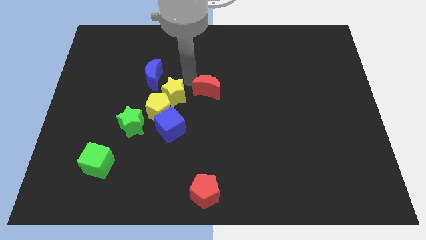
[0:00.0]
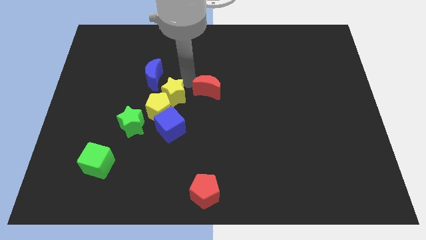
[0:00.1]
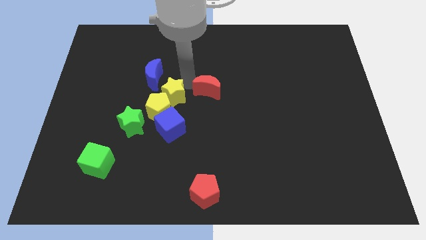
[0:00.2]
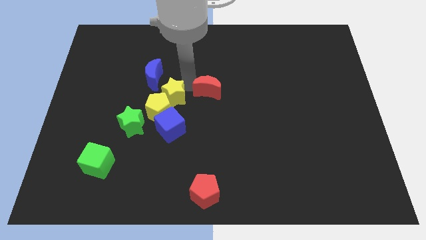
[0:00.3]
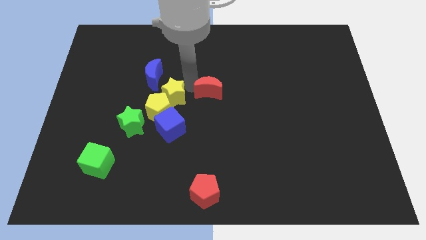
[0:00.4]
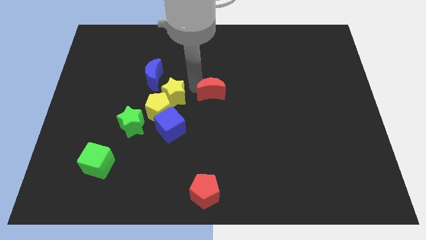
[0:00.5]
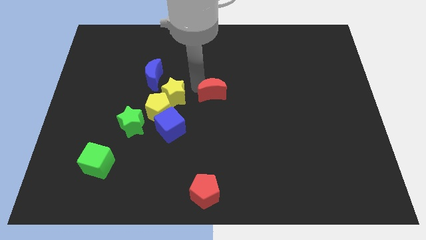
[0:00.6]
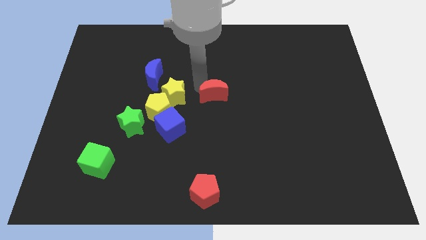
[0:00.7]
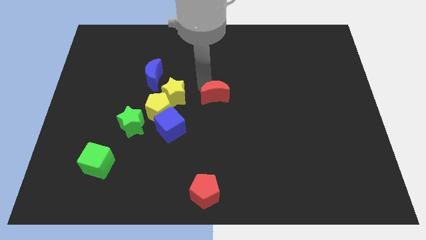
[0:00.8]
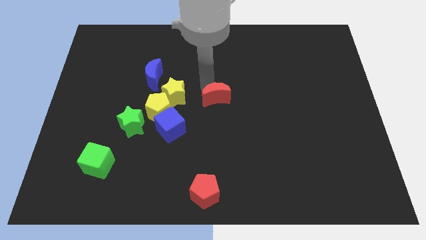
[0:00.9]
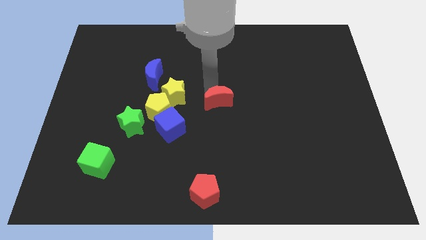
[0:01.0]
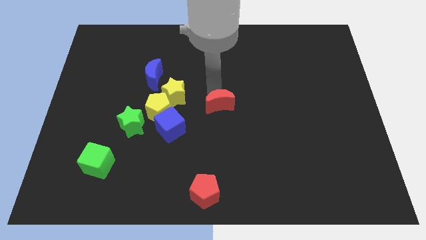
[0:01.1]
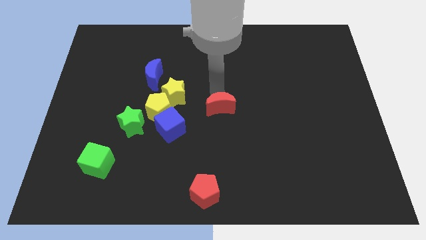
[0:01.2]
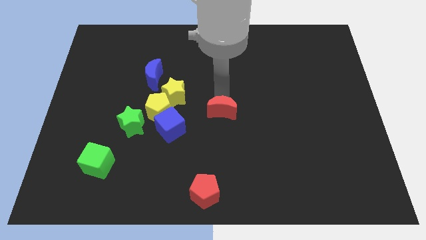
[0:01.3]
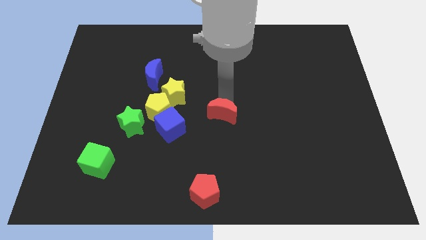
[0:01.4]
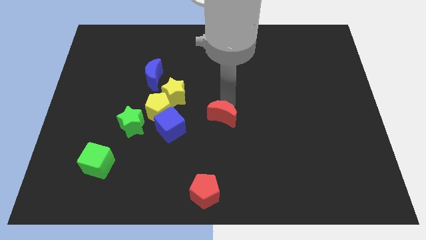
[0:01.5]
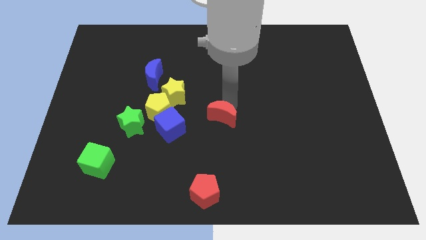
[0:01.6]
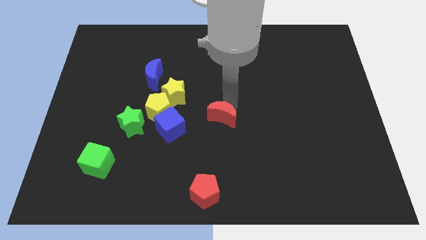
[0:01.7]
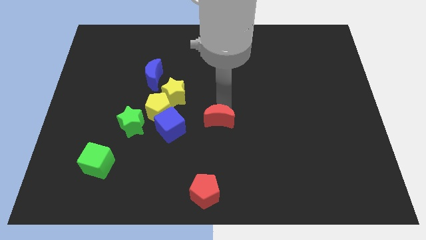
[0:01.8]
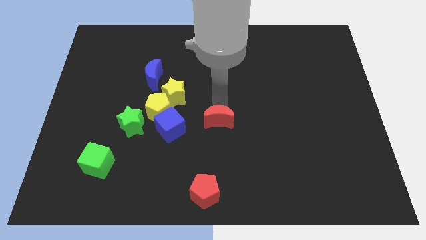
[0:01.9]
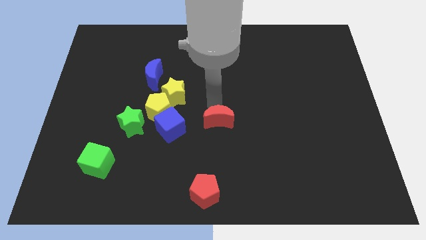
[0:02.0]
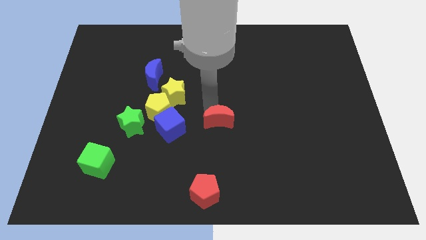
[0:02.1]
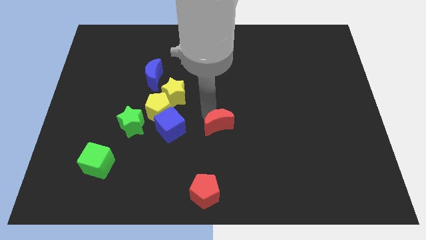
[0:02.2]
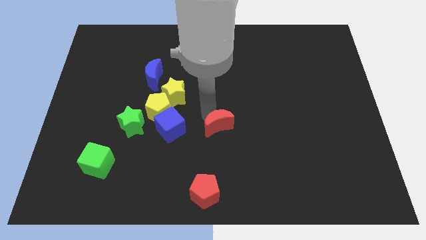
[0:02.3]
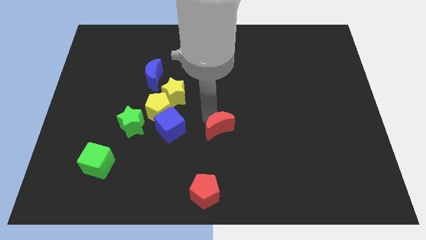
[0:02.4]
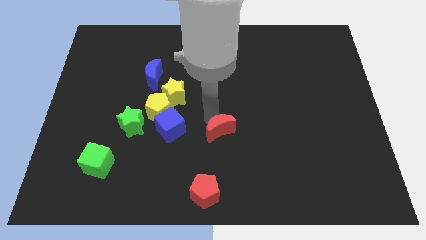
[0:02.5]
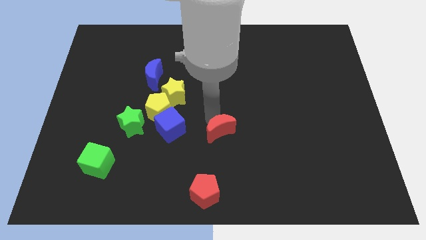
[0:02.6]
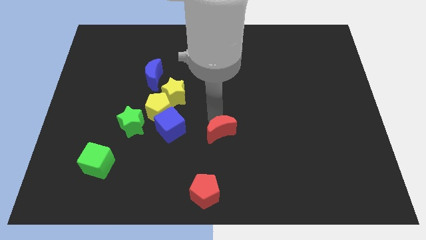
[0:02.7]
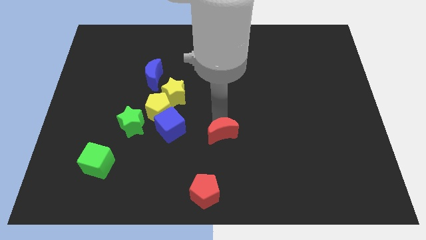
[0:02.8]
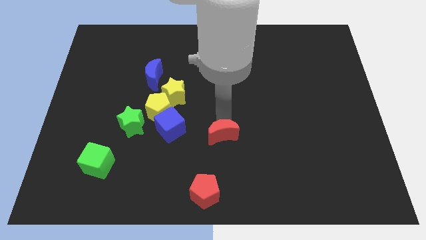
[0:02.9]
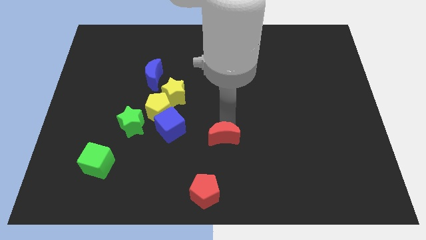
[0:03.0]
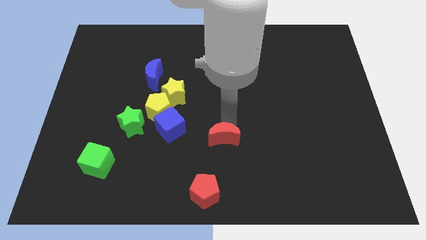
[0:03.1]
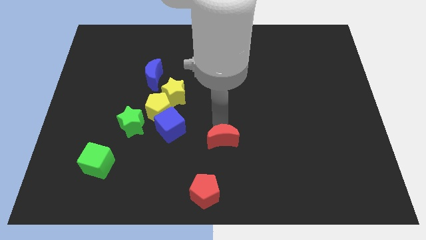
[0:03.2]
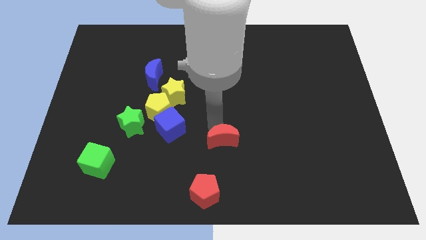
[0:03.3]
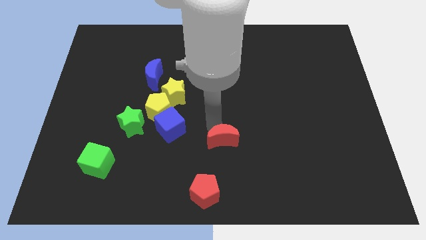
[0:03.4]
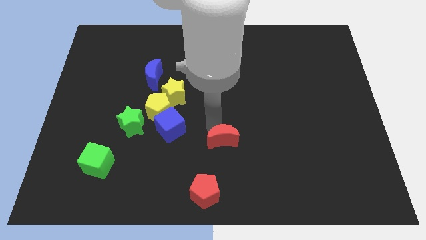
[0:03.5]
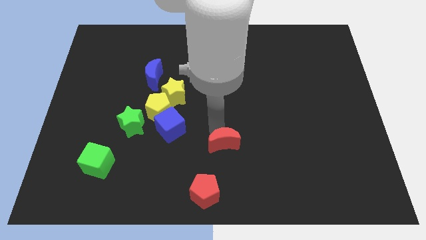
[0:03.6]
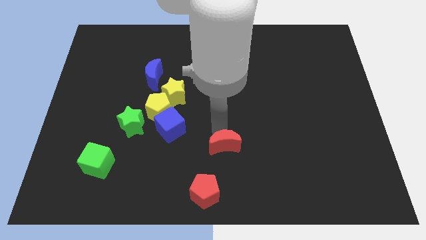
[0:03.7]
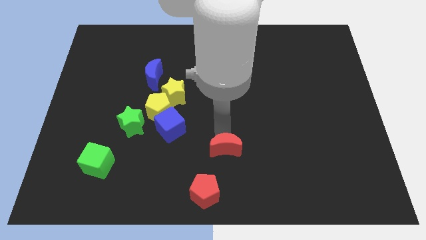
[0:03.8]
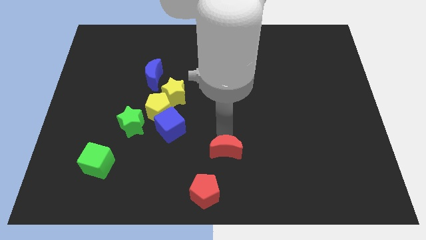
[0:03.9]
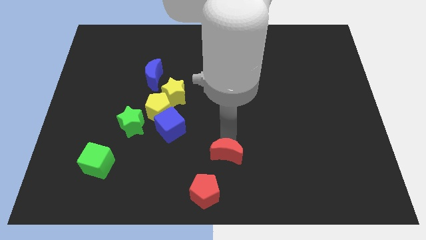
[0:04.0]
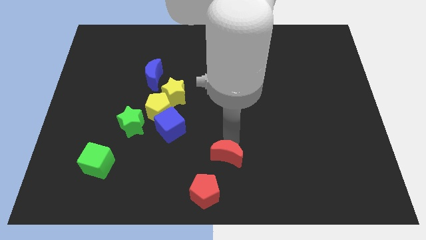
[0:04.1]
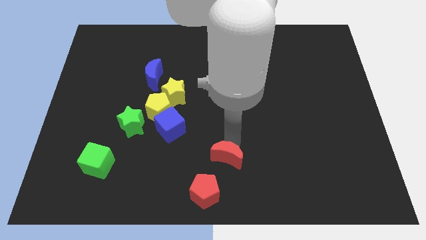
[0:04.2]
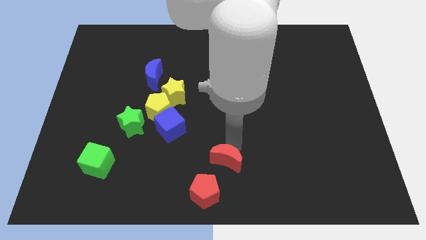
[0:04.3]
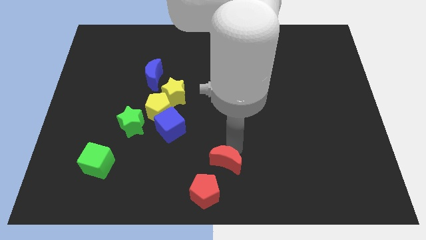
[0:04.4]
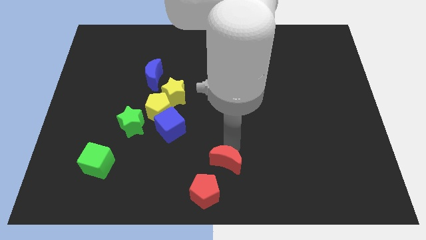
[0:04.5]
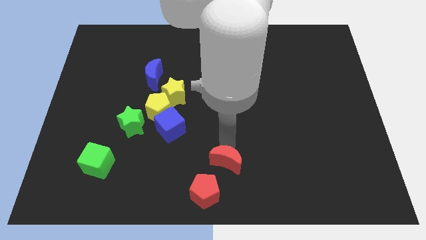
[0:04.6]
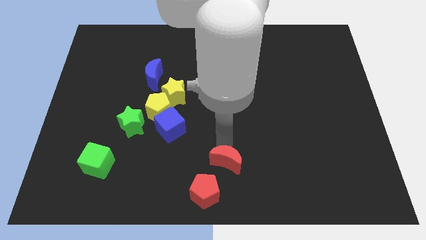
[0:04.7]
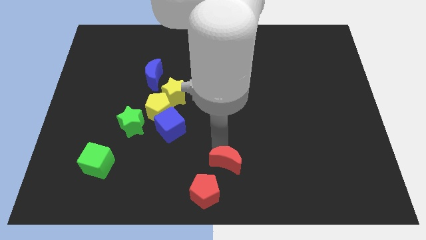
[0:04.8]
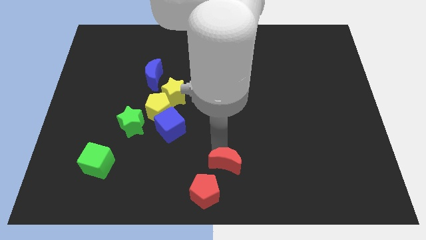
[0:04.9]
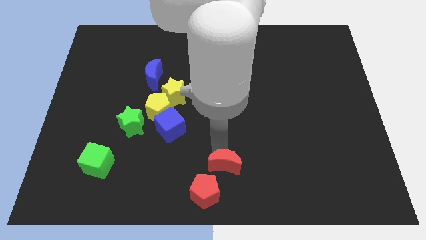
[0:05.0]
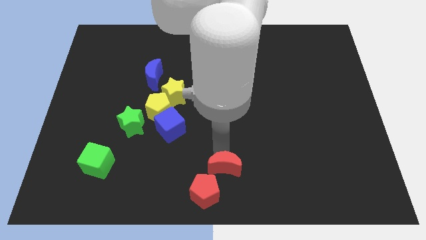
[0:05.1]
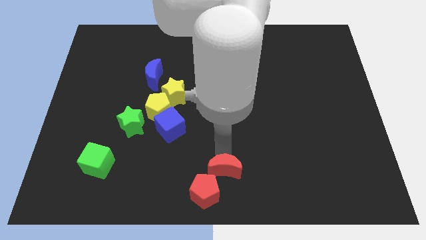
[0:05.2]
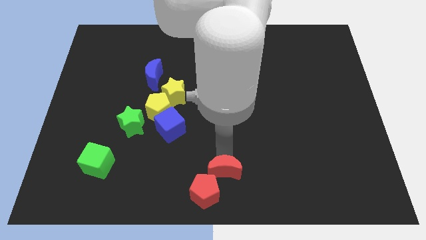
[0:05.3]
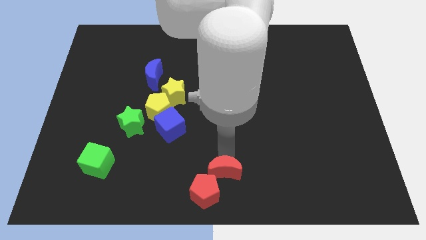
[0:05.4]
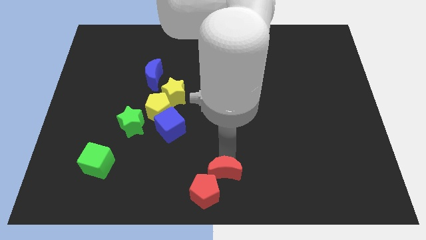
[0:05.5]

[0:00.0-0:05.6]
place the red crescent at the top right side of the red pentagon

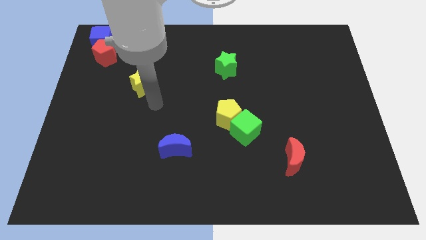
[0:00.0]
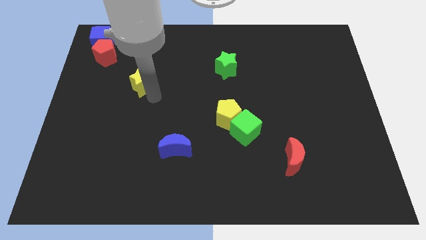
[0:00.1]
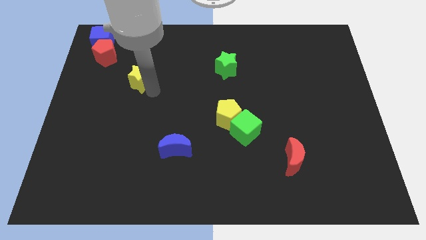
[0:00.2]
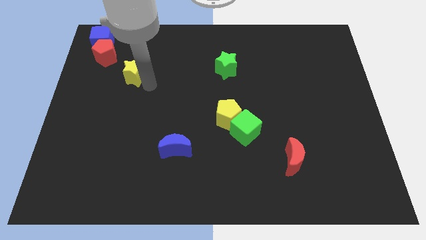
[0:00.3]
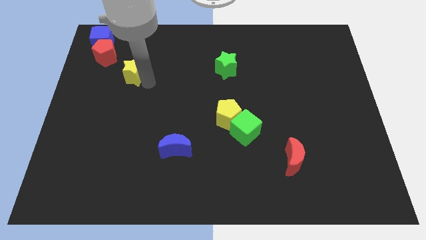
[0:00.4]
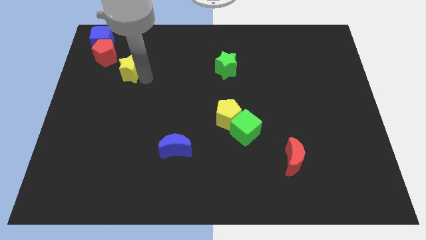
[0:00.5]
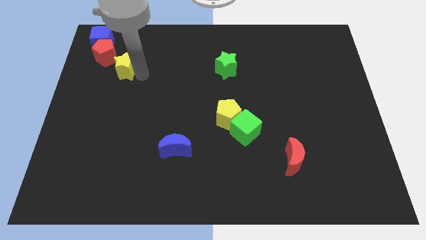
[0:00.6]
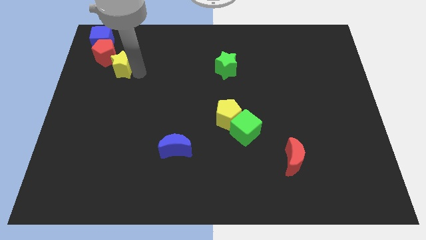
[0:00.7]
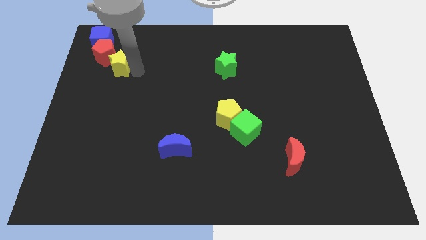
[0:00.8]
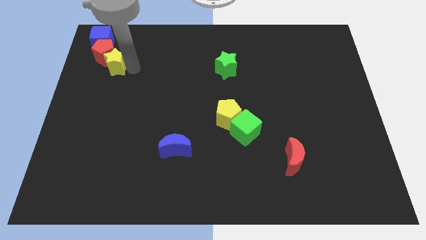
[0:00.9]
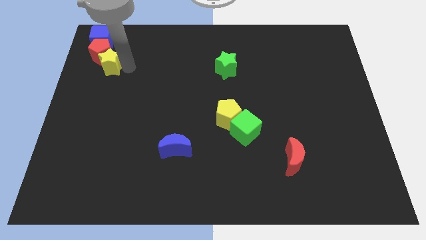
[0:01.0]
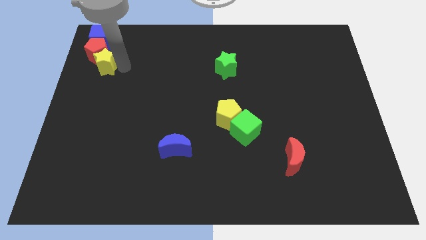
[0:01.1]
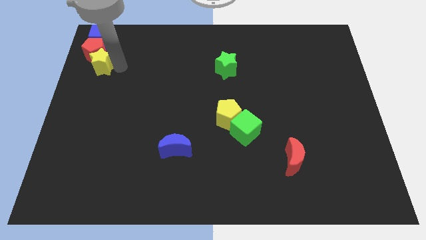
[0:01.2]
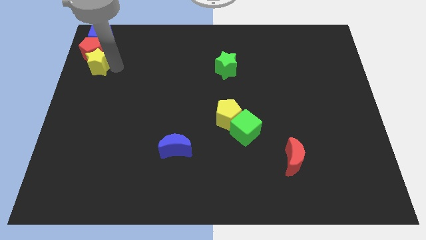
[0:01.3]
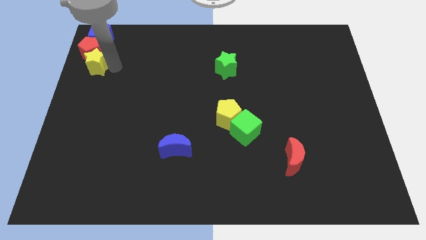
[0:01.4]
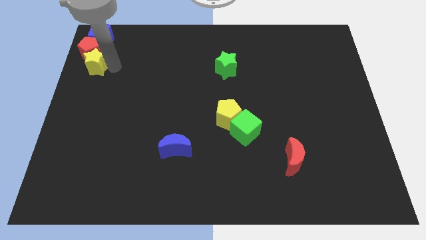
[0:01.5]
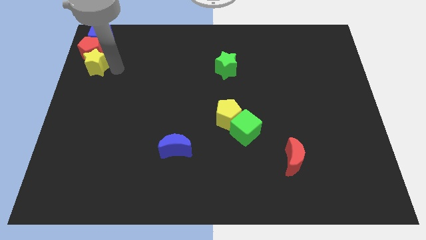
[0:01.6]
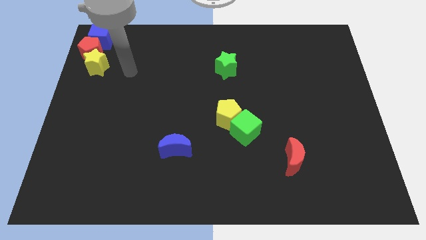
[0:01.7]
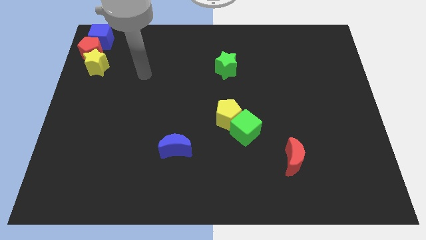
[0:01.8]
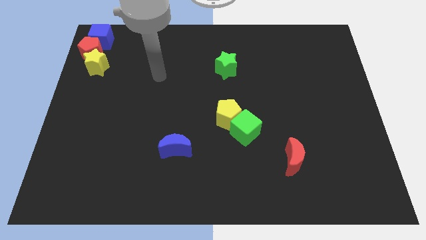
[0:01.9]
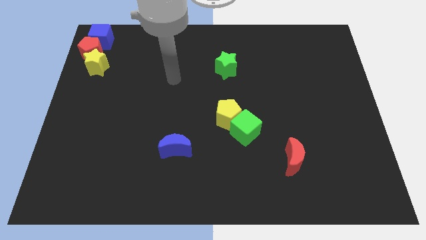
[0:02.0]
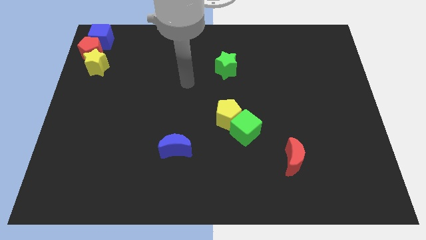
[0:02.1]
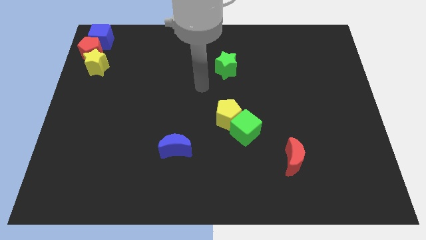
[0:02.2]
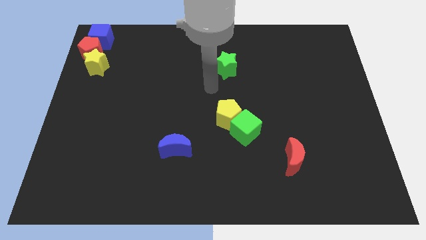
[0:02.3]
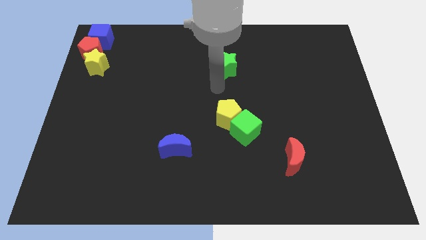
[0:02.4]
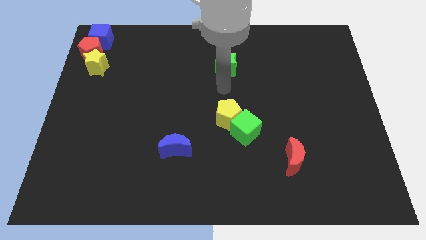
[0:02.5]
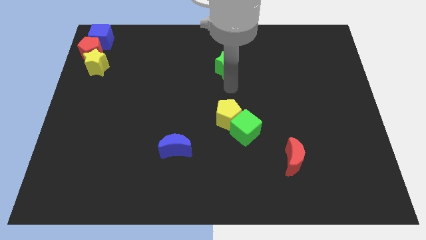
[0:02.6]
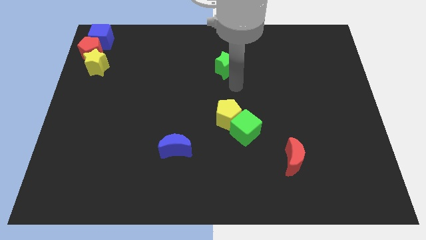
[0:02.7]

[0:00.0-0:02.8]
push the yellow star into the red pentagon

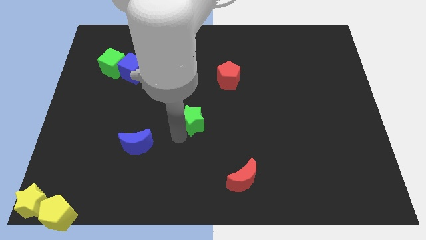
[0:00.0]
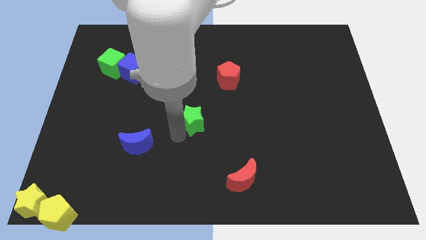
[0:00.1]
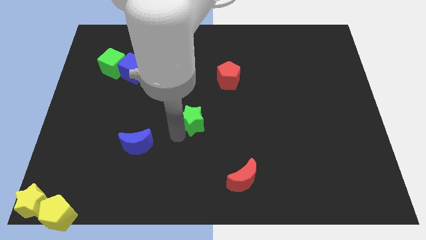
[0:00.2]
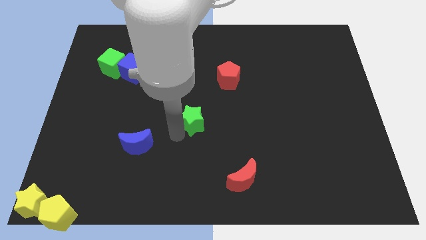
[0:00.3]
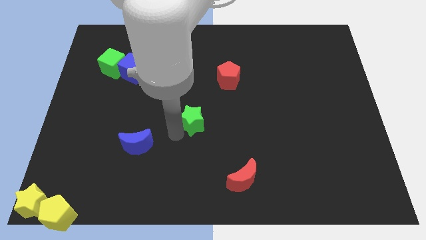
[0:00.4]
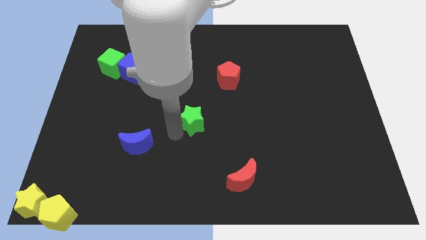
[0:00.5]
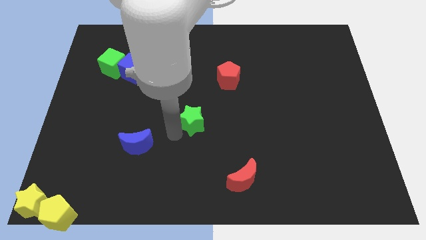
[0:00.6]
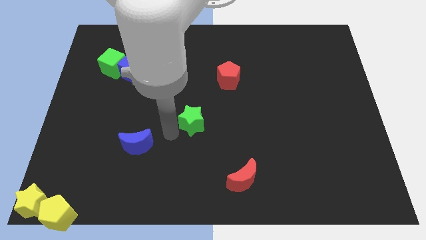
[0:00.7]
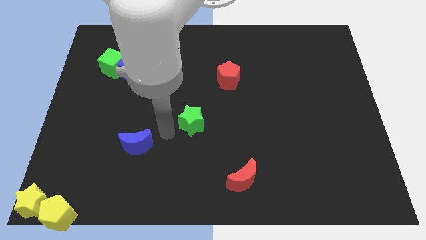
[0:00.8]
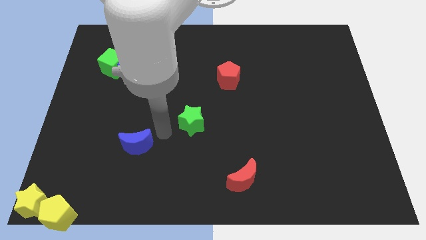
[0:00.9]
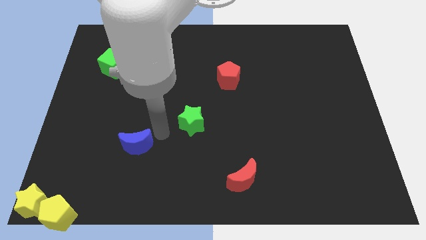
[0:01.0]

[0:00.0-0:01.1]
place your hand in between green star and blue moon
